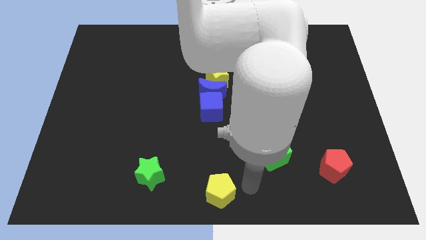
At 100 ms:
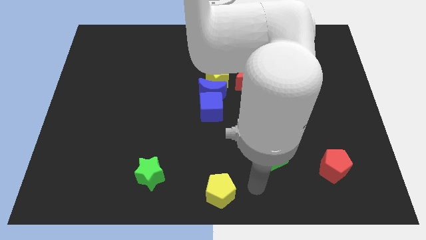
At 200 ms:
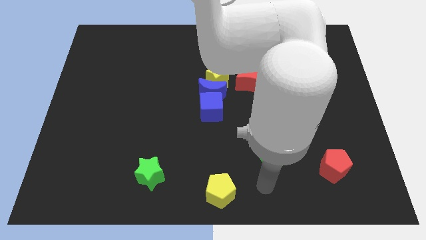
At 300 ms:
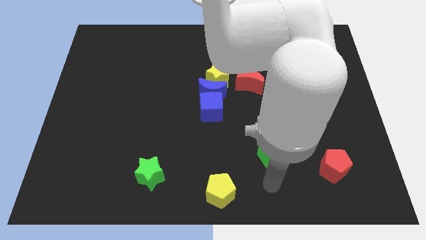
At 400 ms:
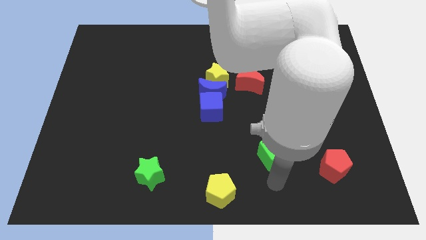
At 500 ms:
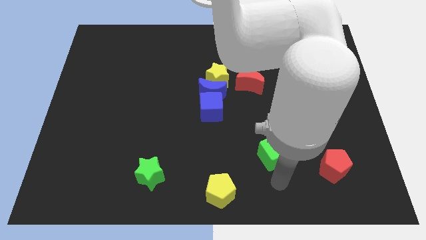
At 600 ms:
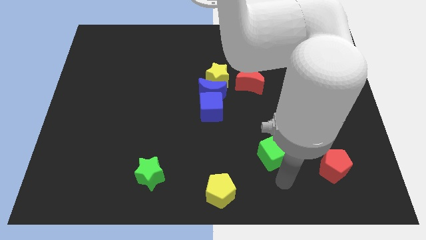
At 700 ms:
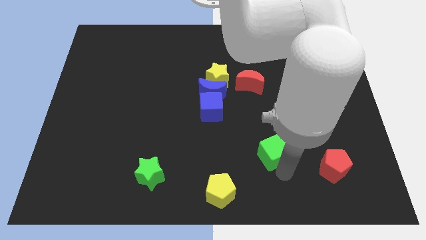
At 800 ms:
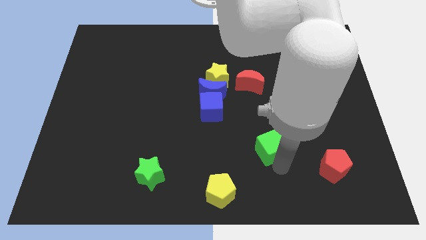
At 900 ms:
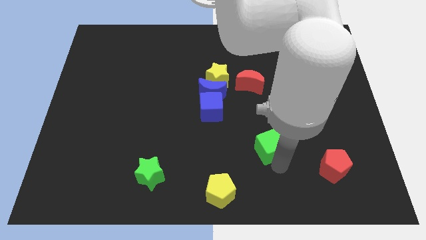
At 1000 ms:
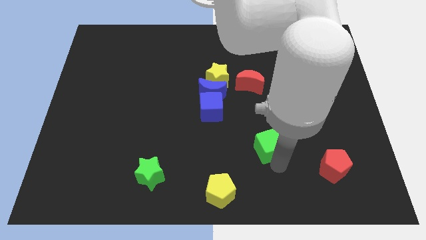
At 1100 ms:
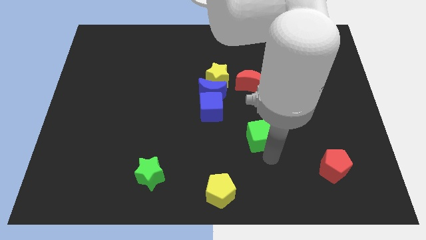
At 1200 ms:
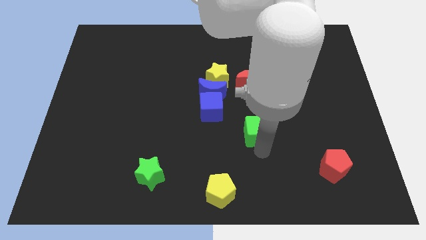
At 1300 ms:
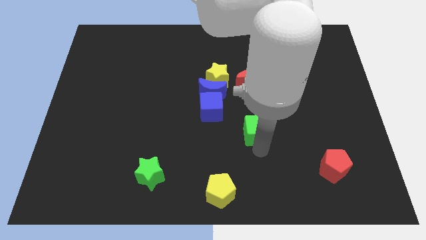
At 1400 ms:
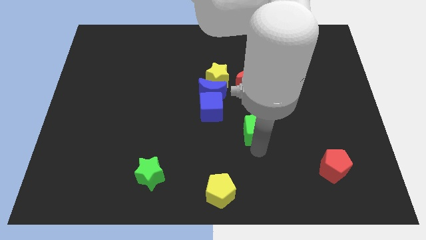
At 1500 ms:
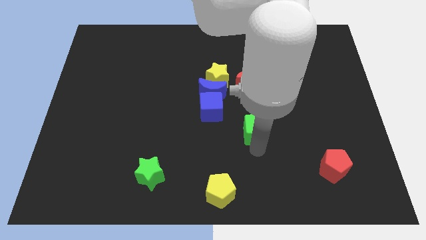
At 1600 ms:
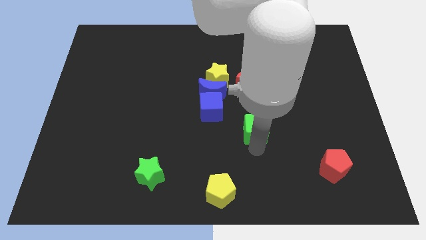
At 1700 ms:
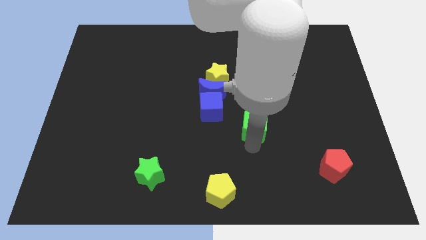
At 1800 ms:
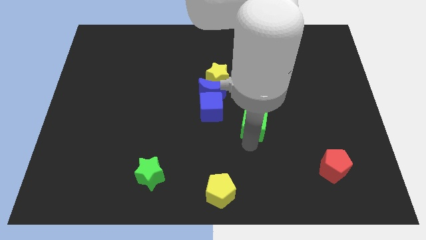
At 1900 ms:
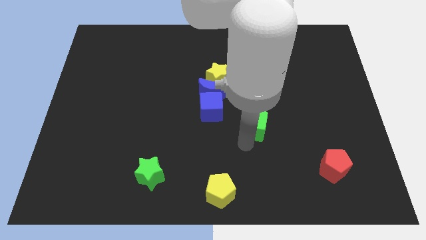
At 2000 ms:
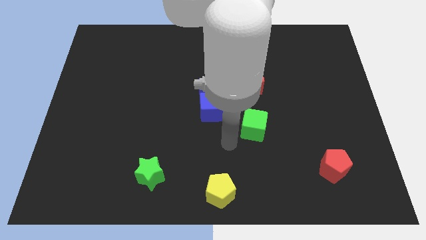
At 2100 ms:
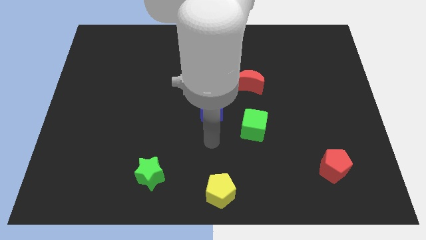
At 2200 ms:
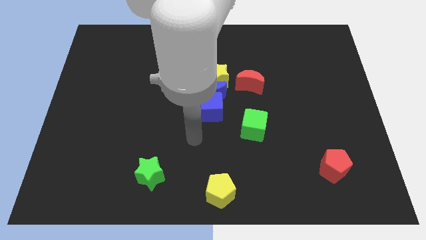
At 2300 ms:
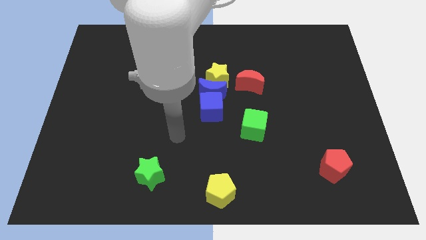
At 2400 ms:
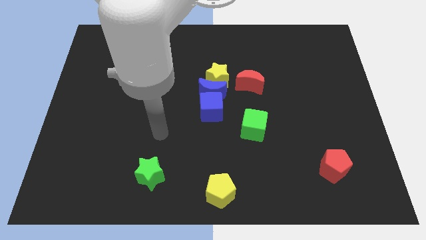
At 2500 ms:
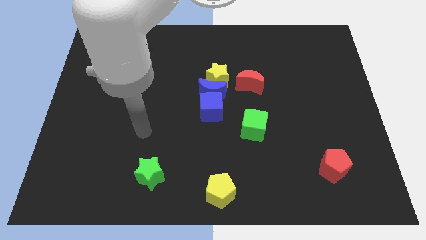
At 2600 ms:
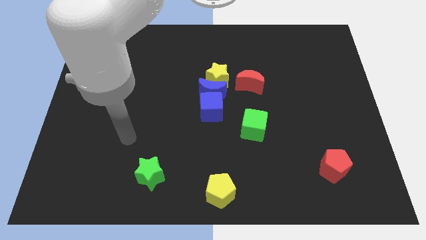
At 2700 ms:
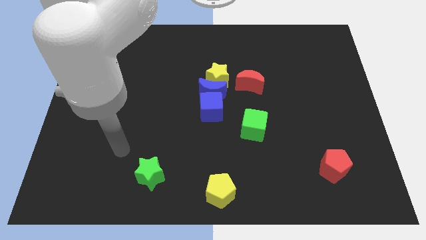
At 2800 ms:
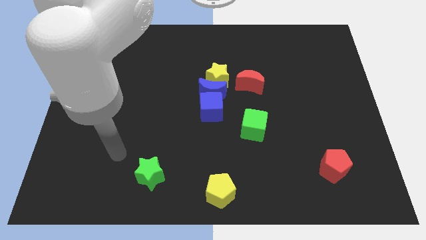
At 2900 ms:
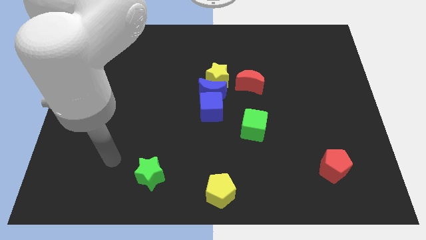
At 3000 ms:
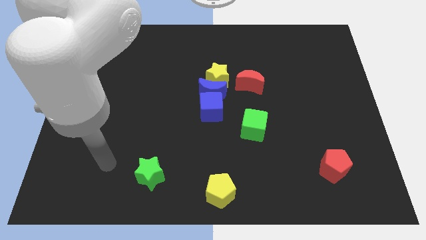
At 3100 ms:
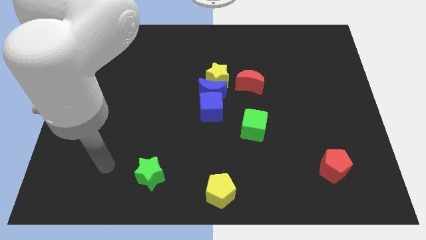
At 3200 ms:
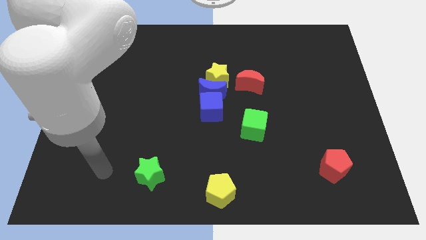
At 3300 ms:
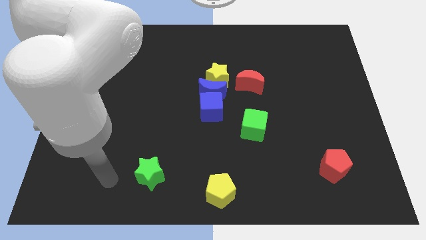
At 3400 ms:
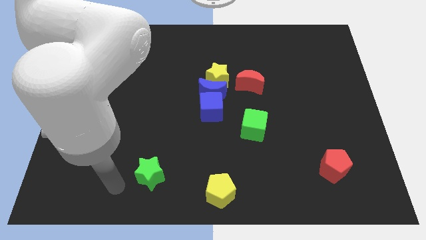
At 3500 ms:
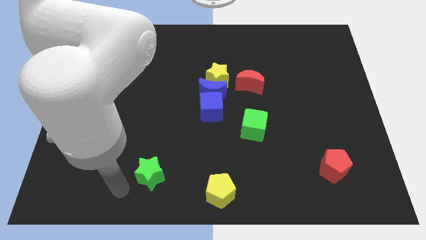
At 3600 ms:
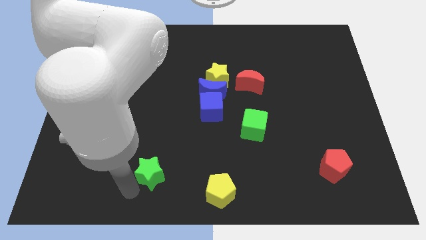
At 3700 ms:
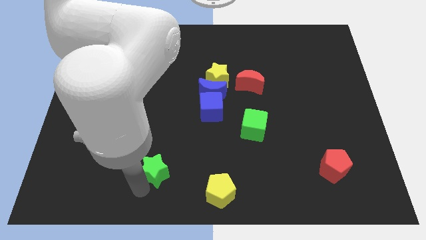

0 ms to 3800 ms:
push the green cube slightly to the top

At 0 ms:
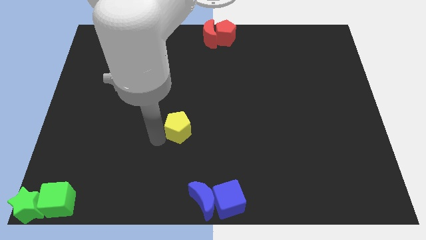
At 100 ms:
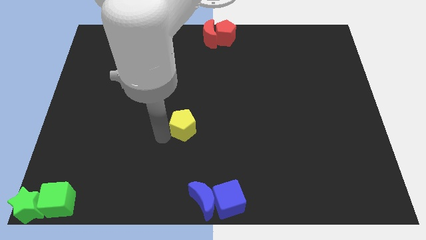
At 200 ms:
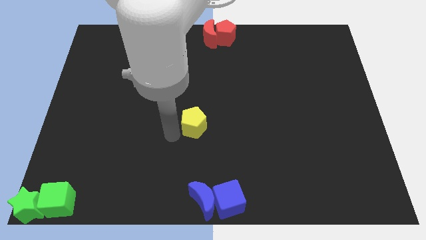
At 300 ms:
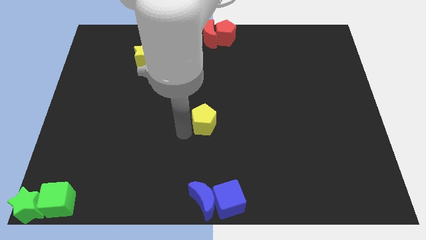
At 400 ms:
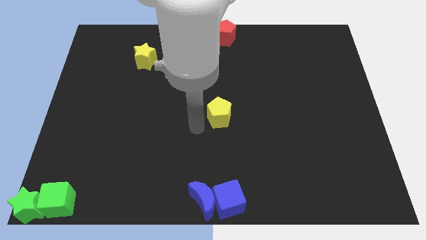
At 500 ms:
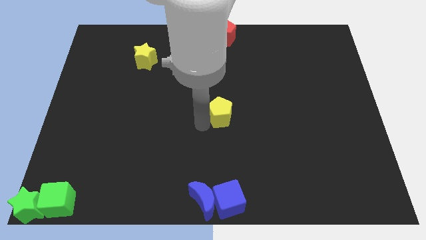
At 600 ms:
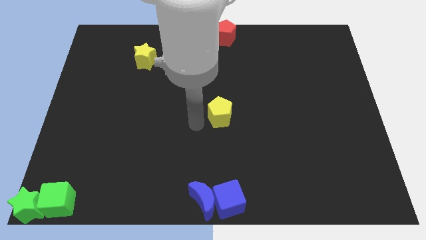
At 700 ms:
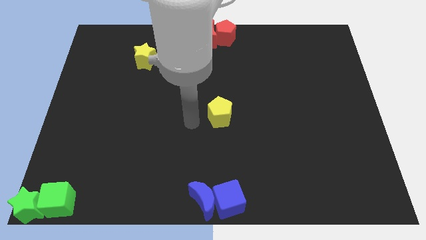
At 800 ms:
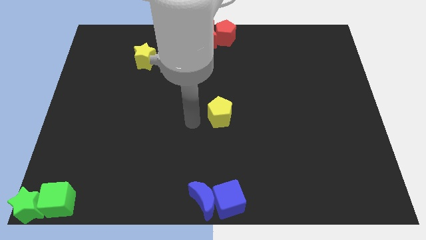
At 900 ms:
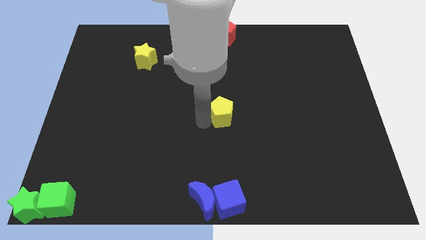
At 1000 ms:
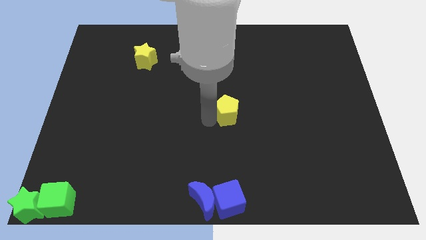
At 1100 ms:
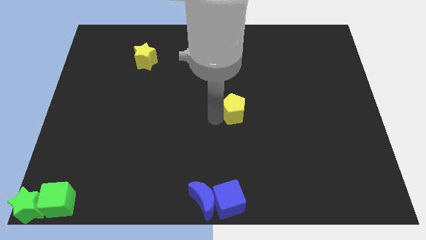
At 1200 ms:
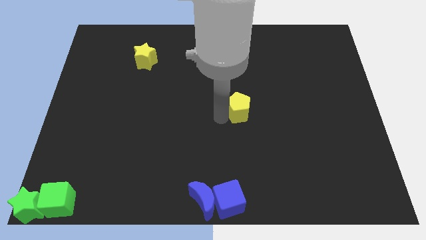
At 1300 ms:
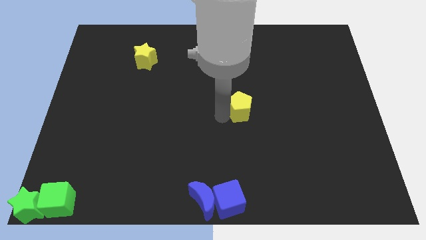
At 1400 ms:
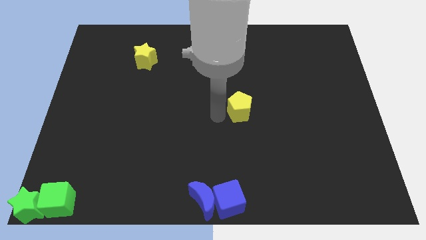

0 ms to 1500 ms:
move yellow pentagon to the center of the board

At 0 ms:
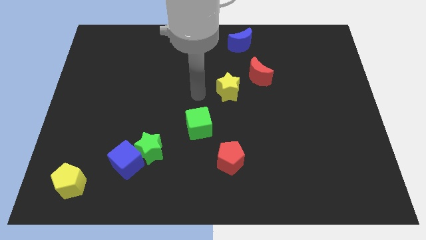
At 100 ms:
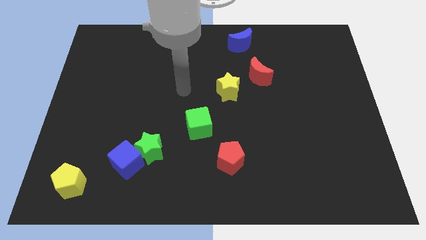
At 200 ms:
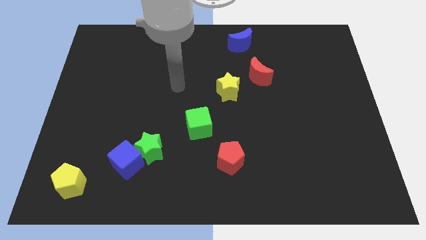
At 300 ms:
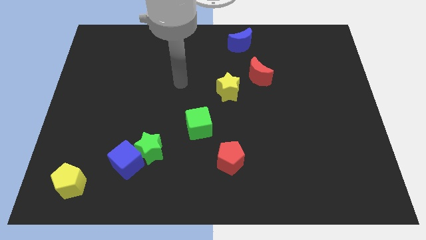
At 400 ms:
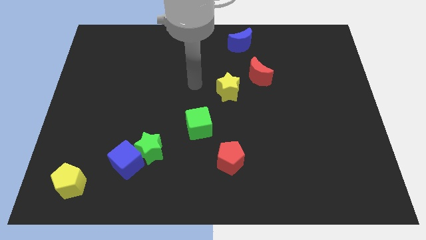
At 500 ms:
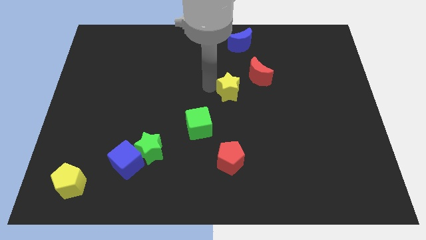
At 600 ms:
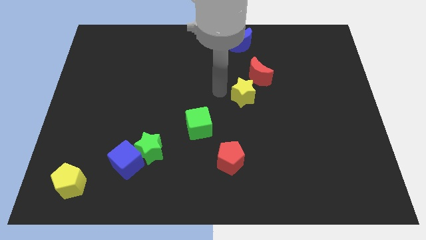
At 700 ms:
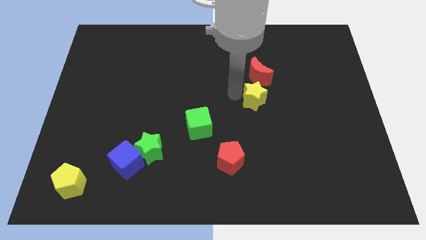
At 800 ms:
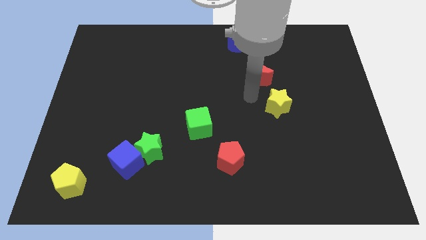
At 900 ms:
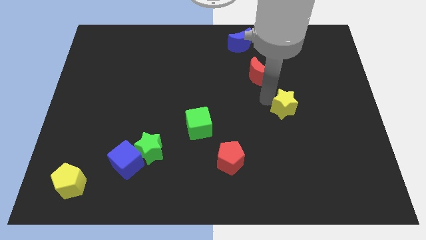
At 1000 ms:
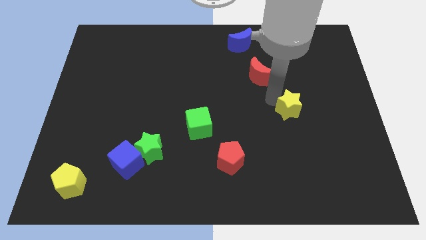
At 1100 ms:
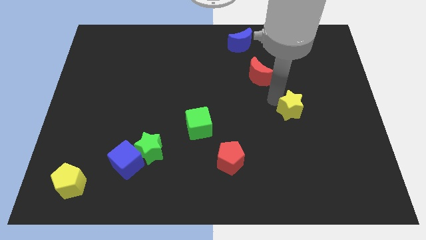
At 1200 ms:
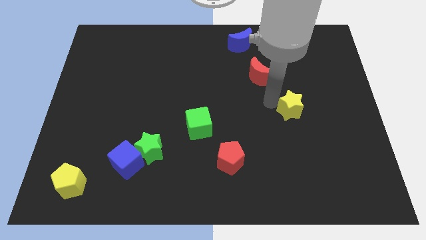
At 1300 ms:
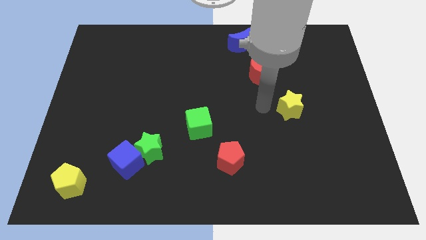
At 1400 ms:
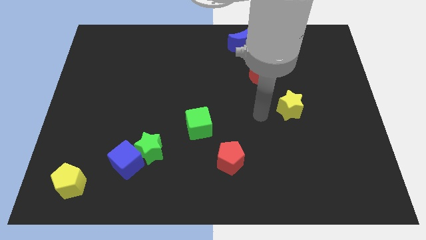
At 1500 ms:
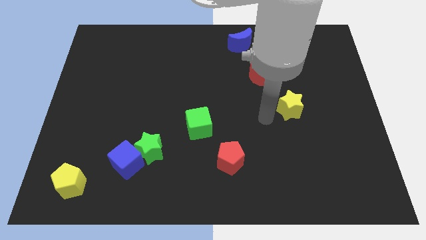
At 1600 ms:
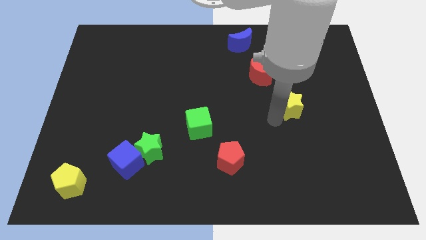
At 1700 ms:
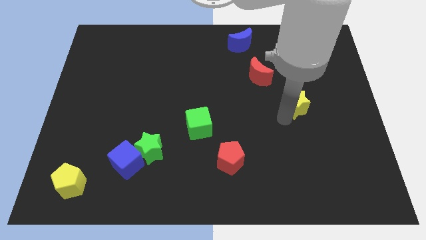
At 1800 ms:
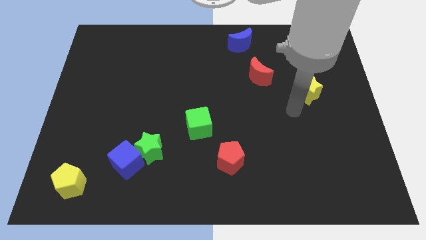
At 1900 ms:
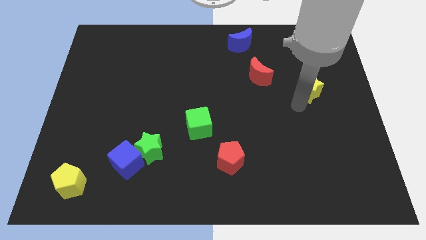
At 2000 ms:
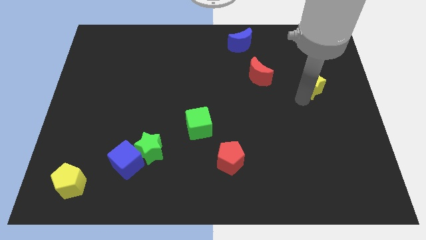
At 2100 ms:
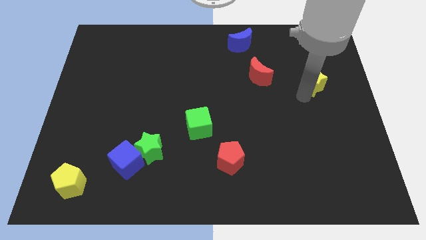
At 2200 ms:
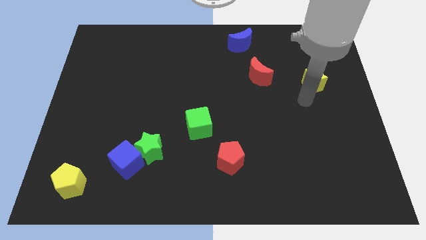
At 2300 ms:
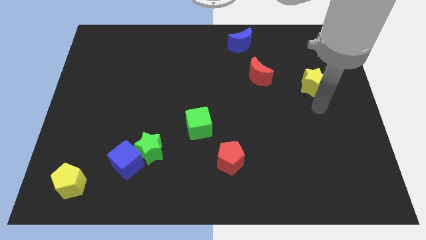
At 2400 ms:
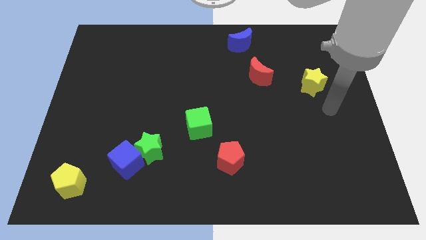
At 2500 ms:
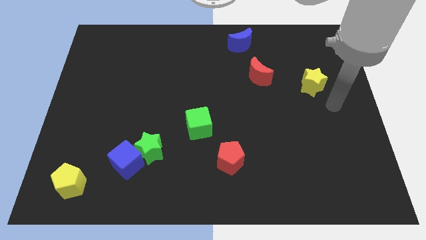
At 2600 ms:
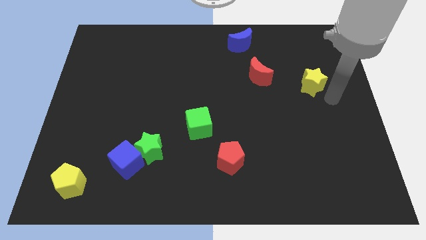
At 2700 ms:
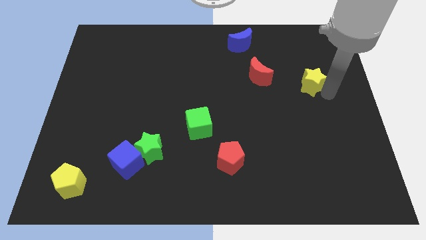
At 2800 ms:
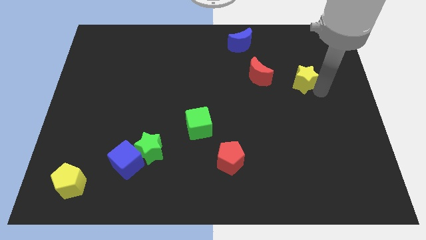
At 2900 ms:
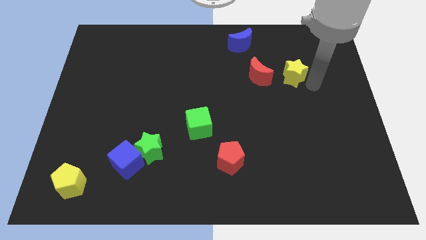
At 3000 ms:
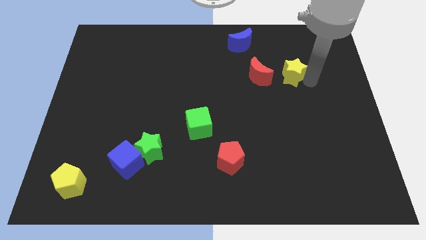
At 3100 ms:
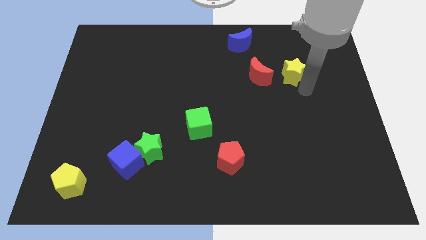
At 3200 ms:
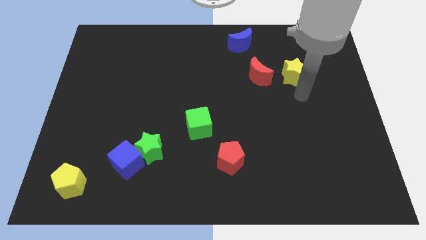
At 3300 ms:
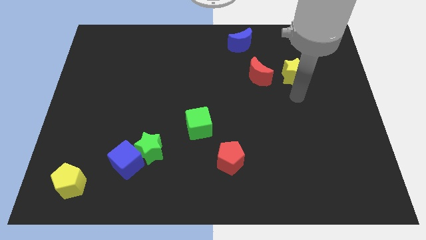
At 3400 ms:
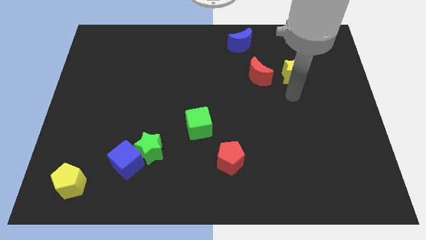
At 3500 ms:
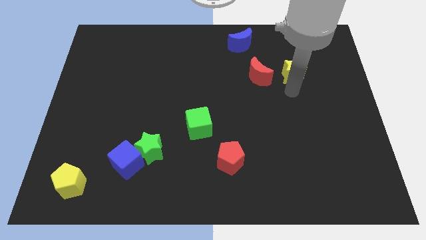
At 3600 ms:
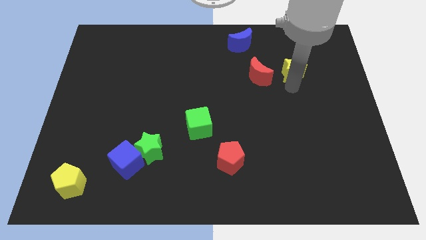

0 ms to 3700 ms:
move the yellow star to the right side of the red crescent

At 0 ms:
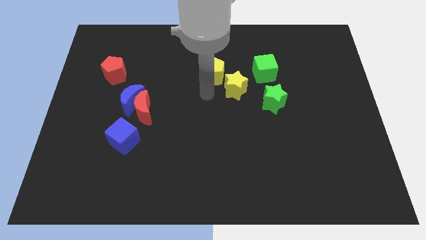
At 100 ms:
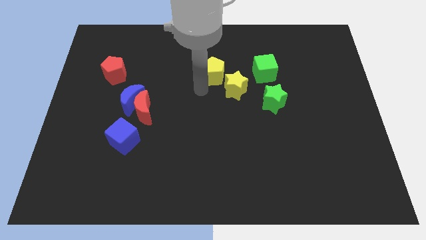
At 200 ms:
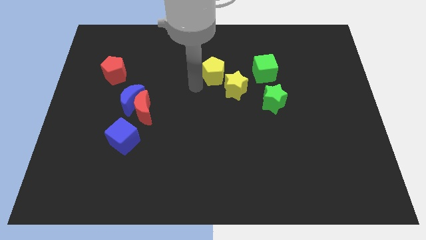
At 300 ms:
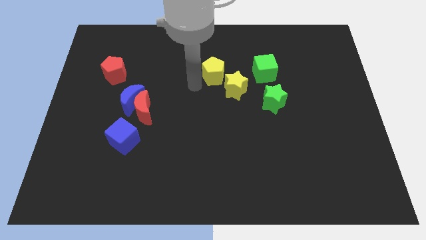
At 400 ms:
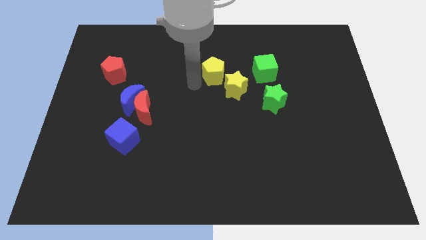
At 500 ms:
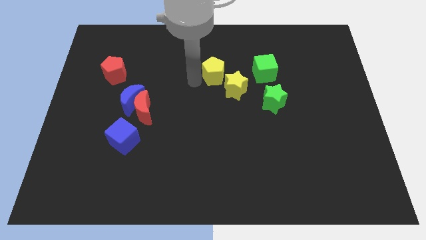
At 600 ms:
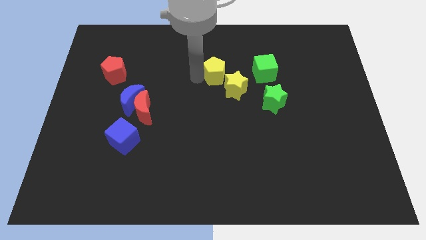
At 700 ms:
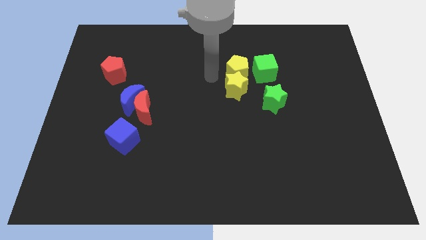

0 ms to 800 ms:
push yellow pentagon above yellow star
